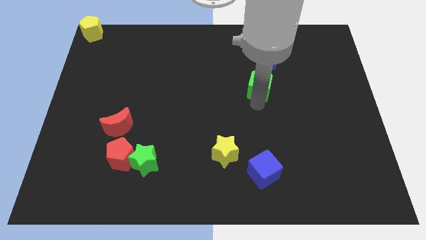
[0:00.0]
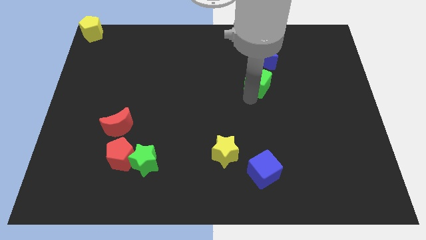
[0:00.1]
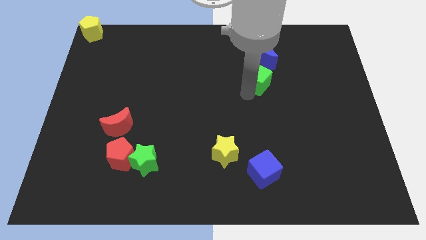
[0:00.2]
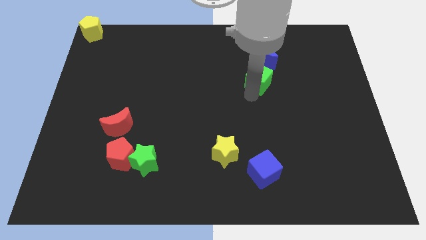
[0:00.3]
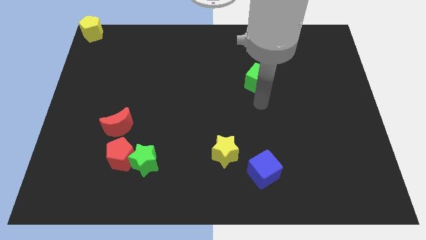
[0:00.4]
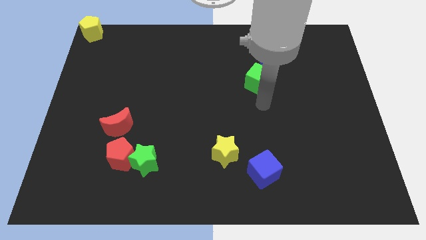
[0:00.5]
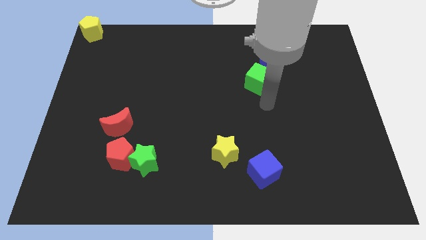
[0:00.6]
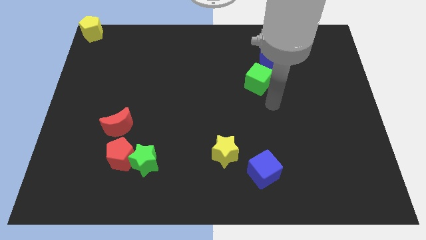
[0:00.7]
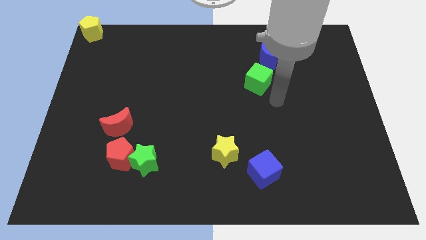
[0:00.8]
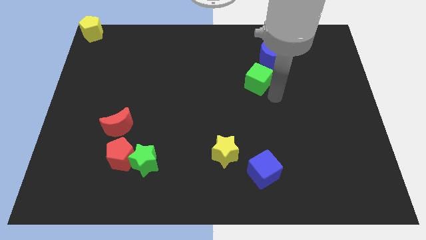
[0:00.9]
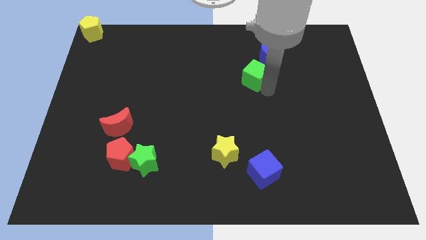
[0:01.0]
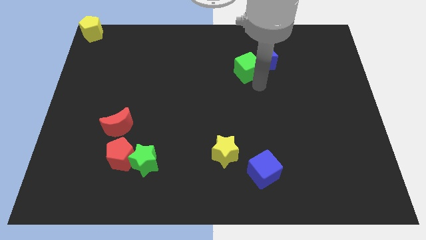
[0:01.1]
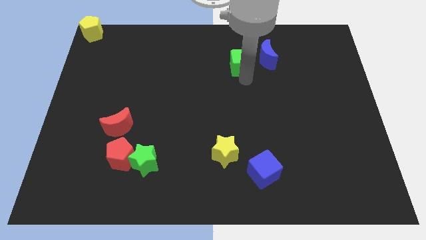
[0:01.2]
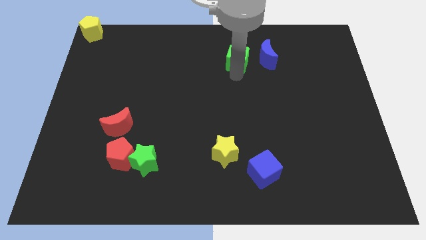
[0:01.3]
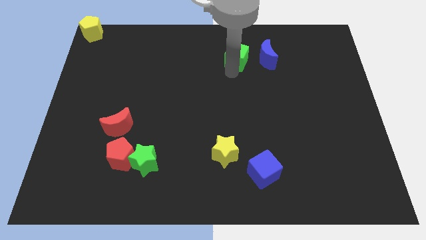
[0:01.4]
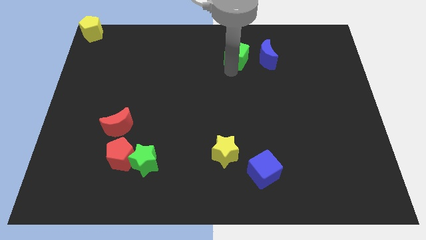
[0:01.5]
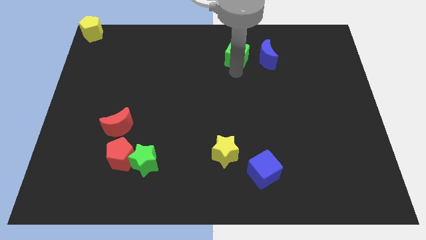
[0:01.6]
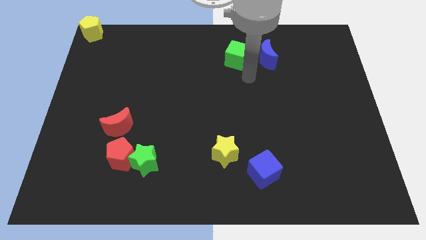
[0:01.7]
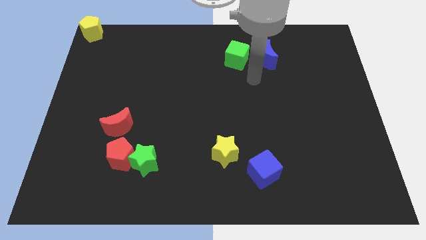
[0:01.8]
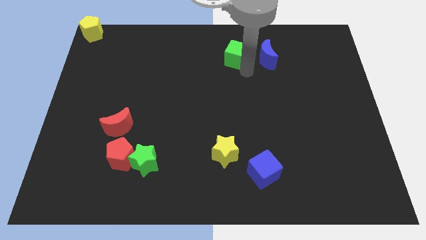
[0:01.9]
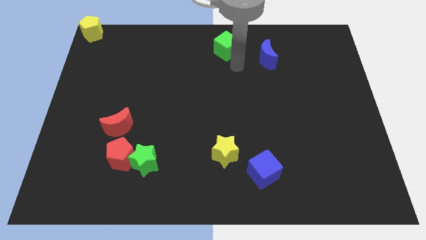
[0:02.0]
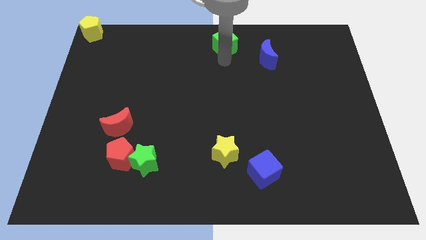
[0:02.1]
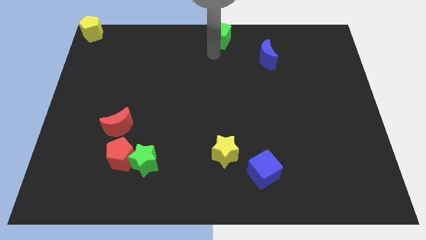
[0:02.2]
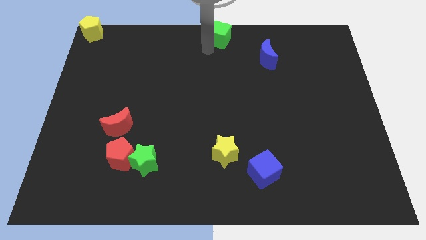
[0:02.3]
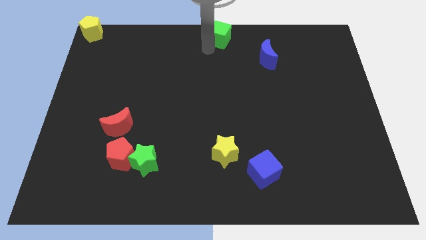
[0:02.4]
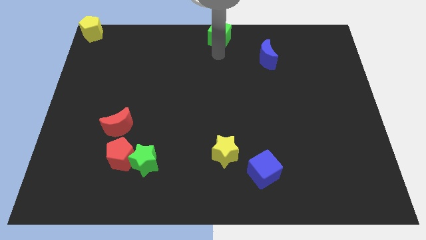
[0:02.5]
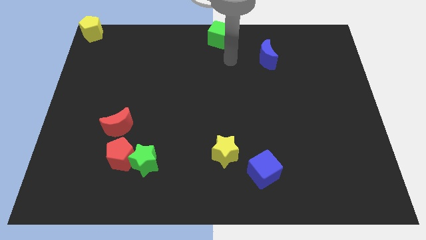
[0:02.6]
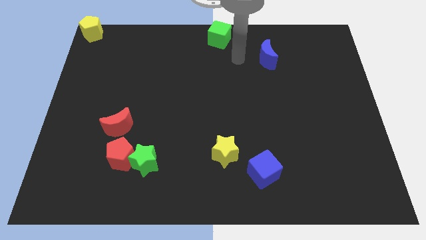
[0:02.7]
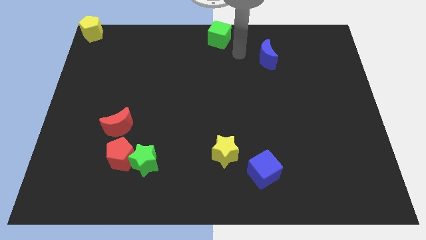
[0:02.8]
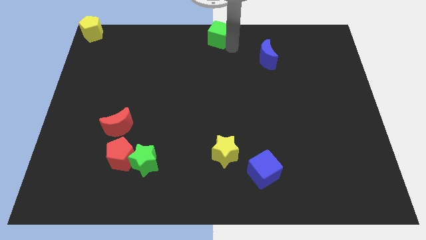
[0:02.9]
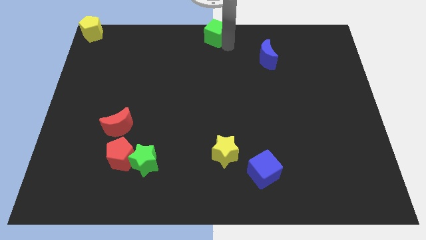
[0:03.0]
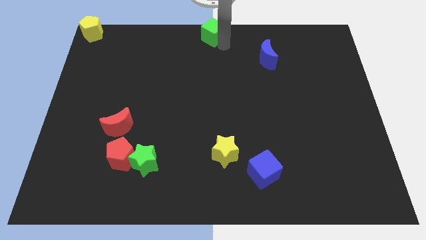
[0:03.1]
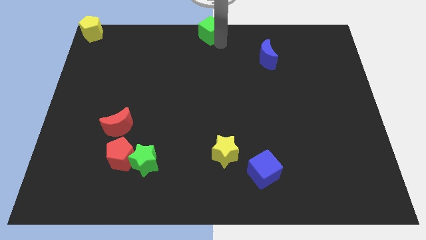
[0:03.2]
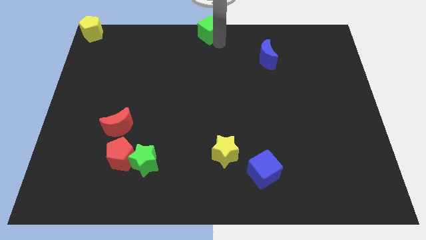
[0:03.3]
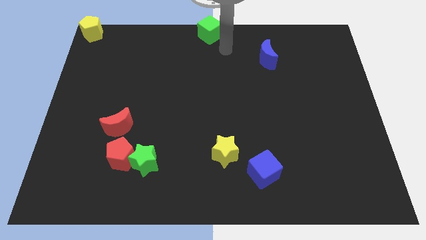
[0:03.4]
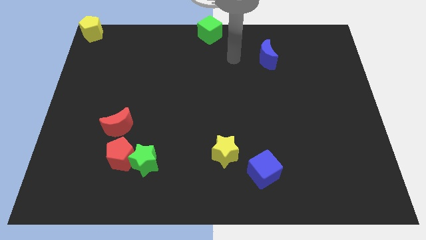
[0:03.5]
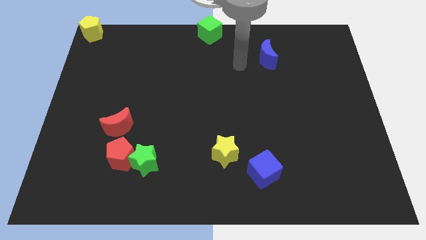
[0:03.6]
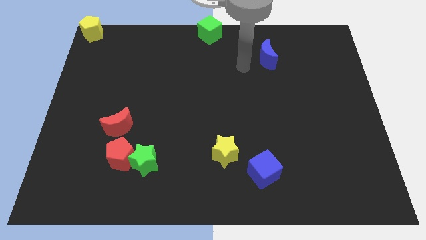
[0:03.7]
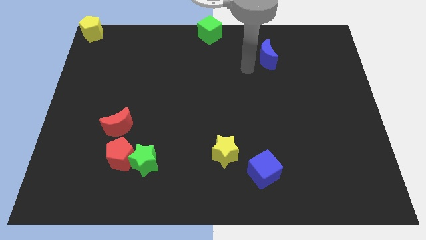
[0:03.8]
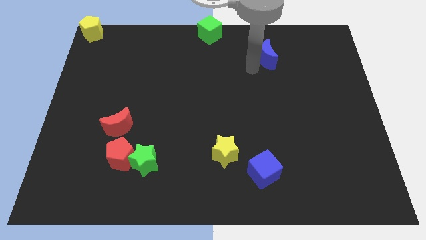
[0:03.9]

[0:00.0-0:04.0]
push the green cube at the top center

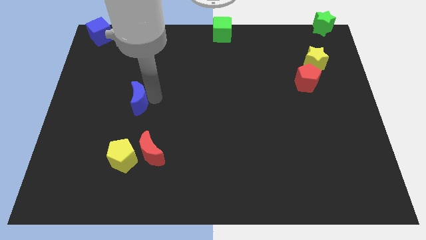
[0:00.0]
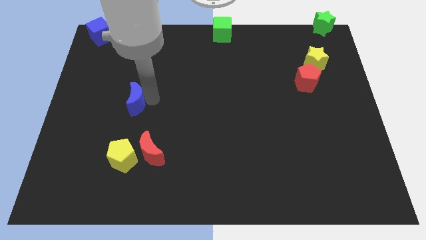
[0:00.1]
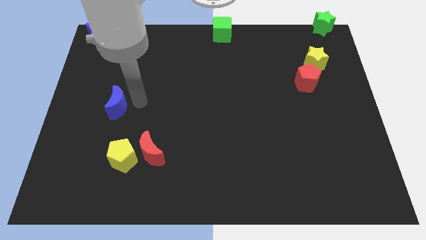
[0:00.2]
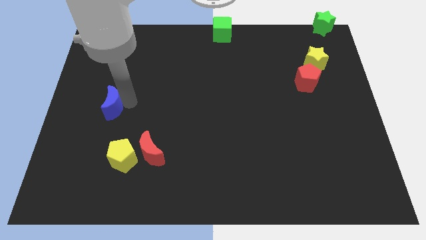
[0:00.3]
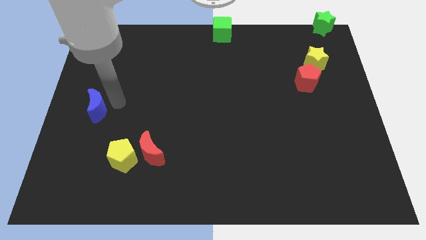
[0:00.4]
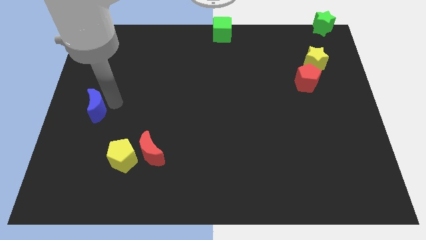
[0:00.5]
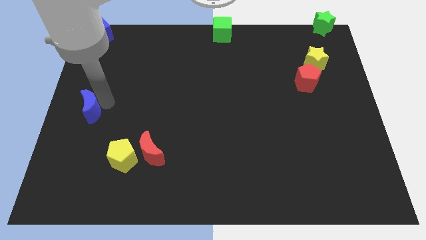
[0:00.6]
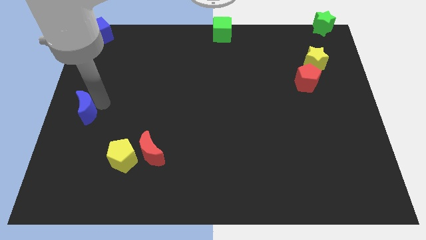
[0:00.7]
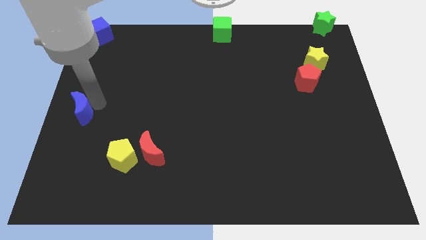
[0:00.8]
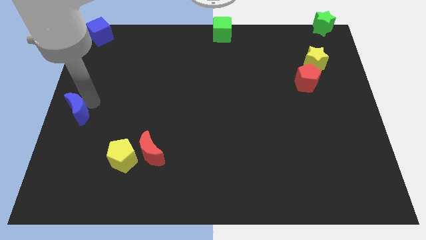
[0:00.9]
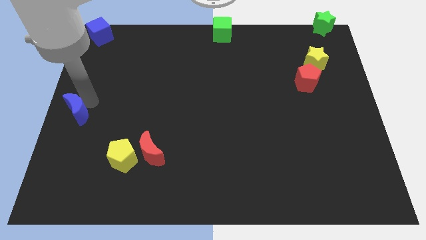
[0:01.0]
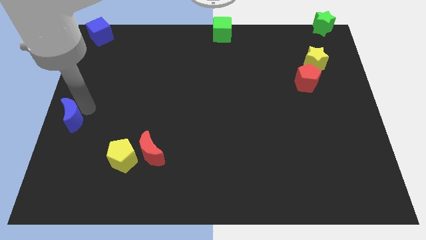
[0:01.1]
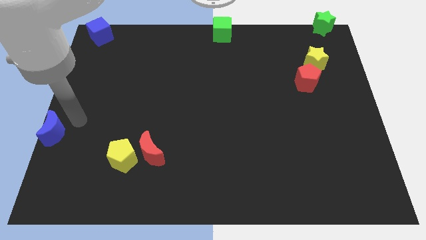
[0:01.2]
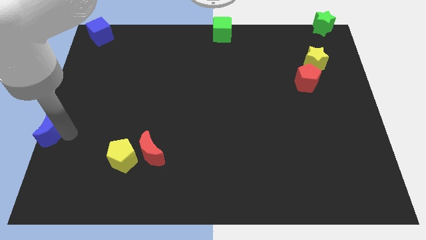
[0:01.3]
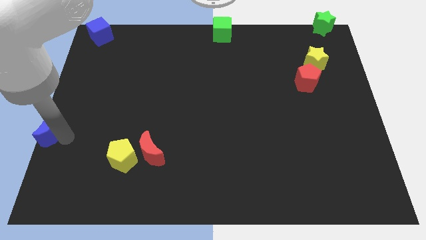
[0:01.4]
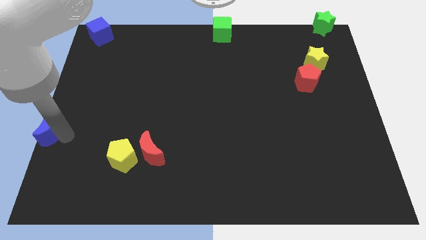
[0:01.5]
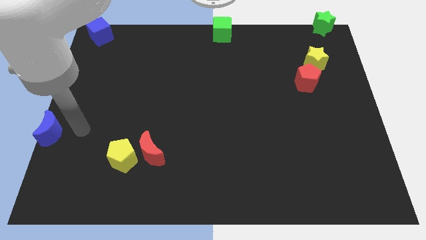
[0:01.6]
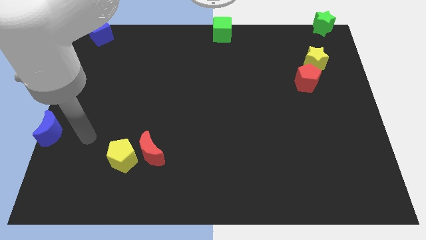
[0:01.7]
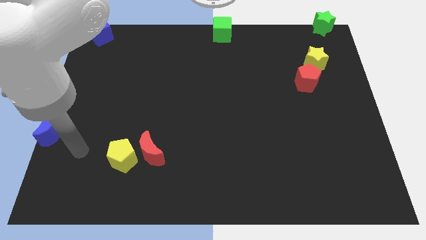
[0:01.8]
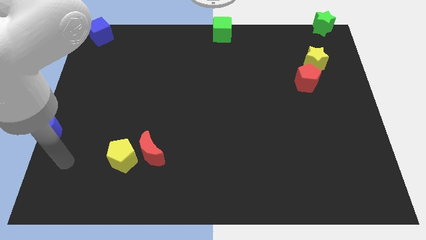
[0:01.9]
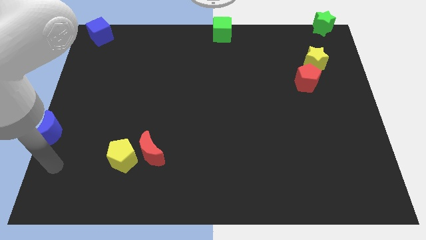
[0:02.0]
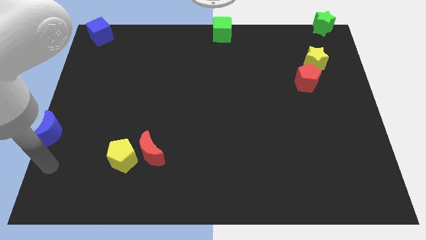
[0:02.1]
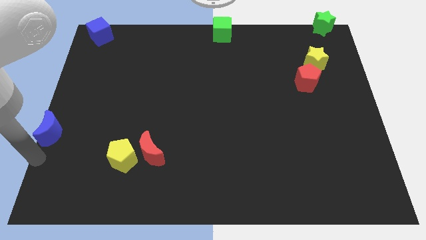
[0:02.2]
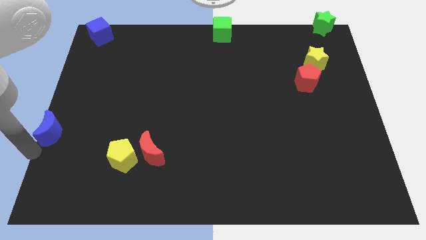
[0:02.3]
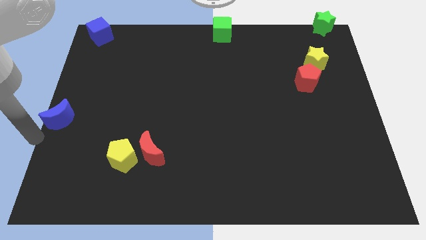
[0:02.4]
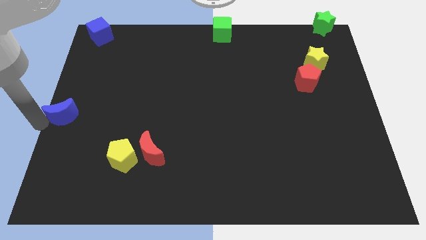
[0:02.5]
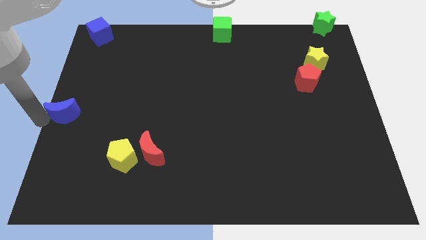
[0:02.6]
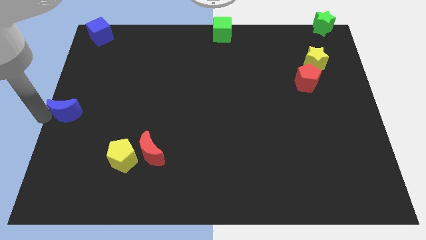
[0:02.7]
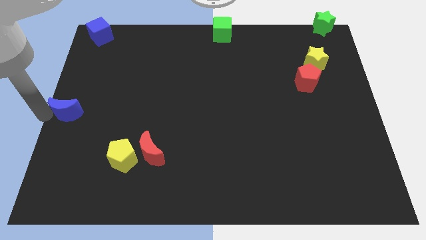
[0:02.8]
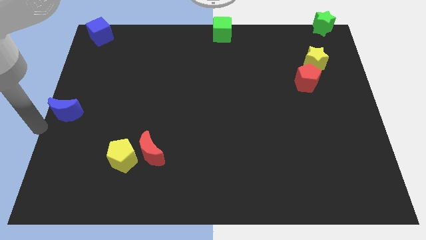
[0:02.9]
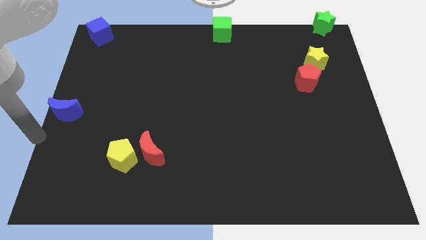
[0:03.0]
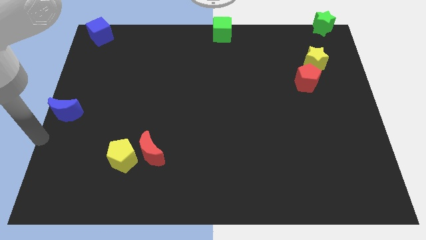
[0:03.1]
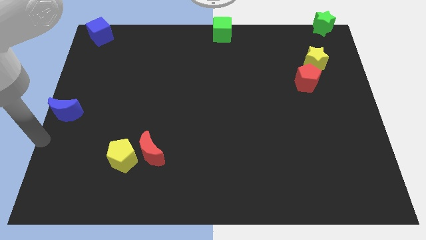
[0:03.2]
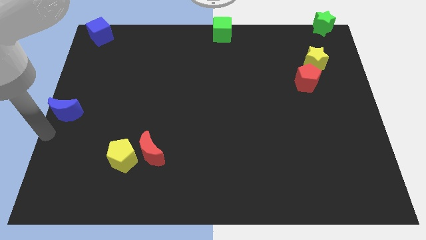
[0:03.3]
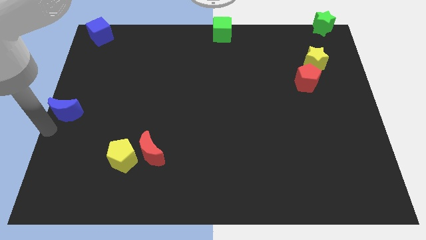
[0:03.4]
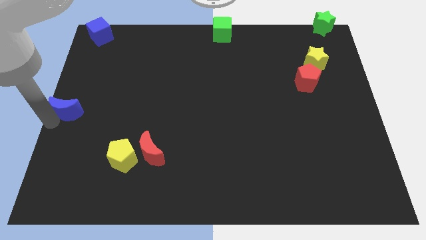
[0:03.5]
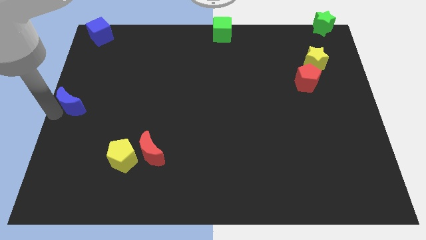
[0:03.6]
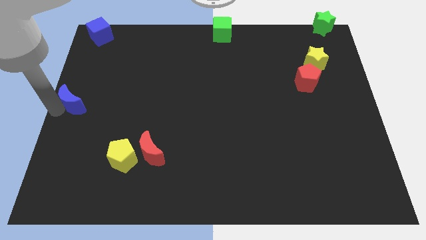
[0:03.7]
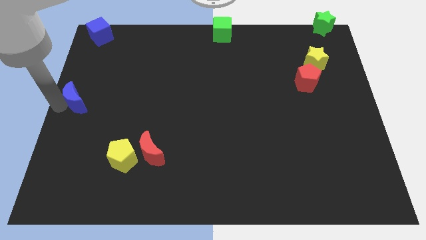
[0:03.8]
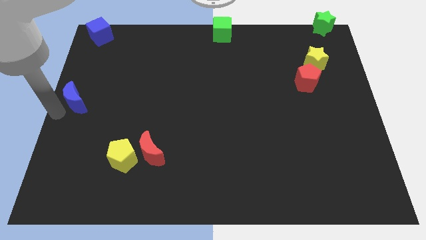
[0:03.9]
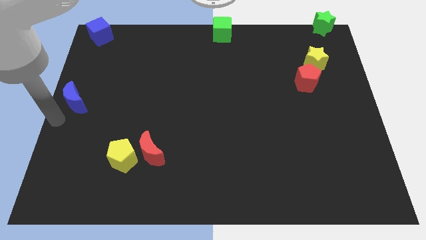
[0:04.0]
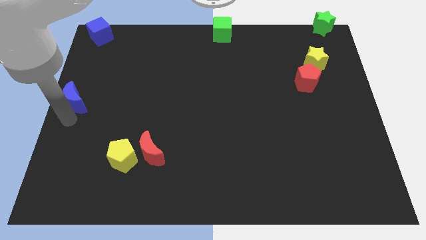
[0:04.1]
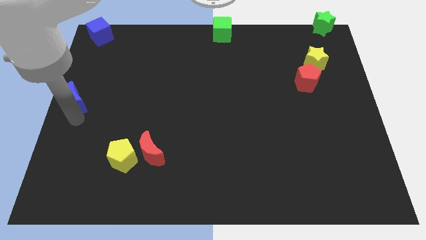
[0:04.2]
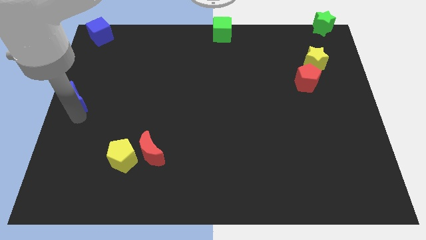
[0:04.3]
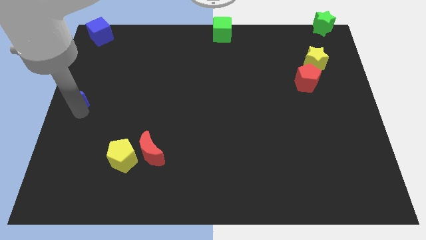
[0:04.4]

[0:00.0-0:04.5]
push blue crescent towards left

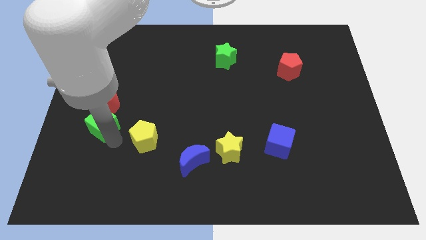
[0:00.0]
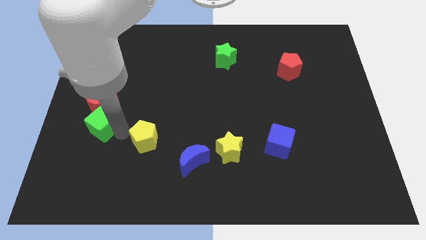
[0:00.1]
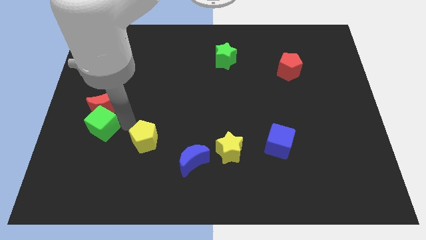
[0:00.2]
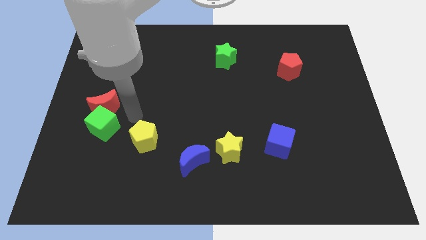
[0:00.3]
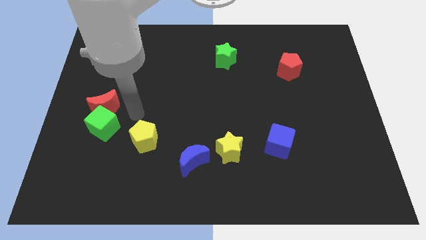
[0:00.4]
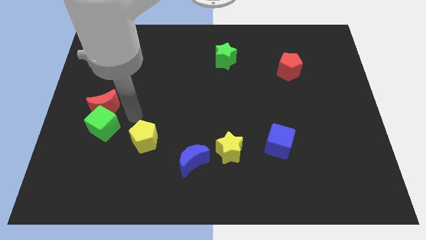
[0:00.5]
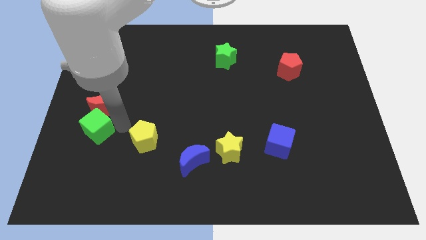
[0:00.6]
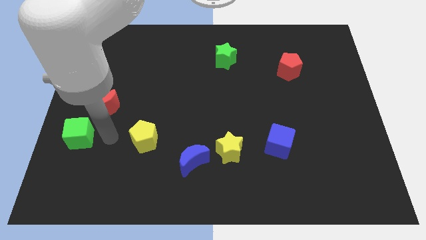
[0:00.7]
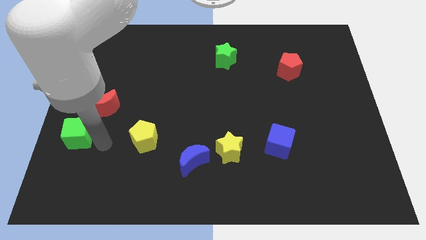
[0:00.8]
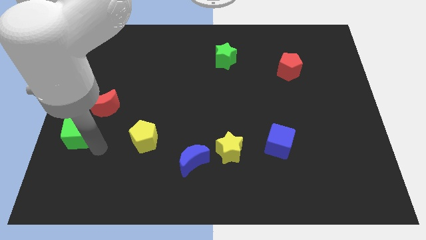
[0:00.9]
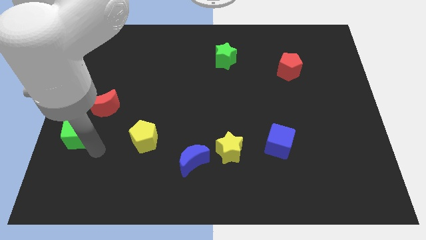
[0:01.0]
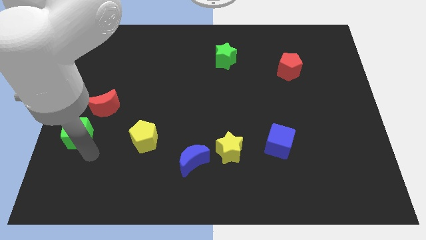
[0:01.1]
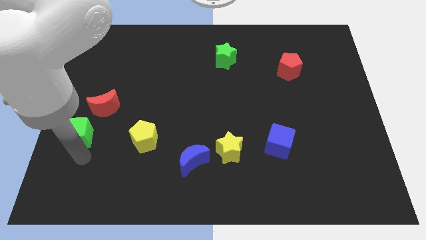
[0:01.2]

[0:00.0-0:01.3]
push the green cube towards the bottom left of the red moon
